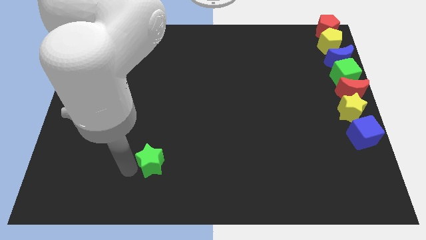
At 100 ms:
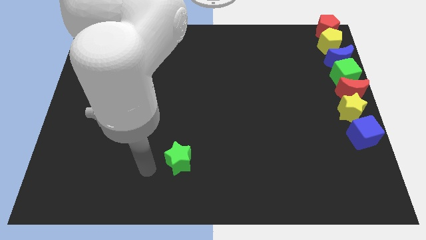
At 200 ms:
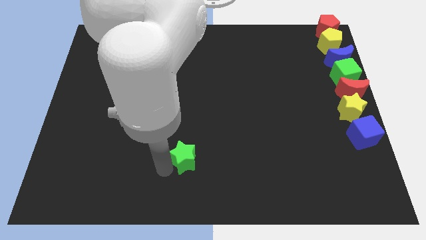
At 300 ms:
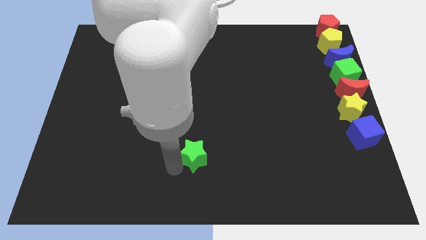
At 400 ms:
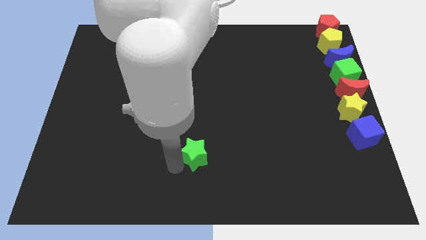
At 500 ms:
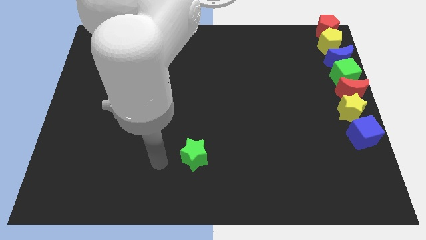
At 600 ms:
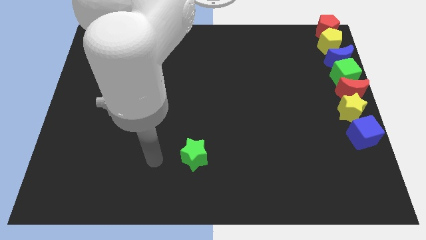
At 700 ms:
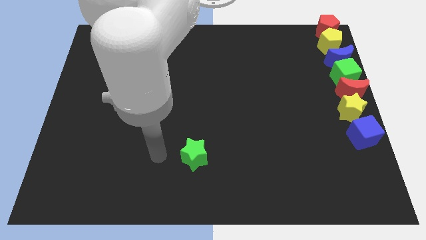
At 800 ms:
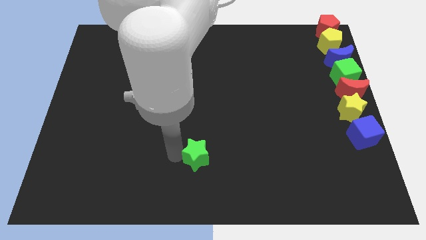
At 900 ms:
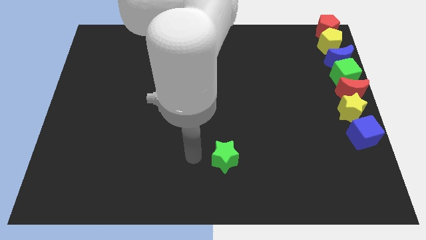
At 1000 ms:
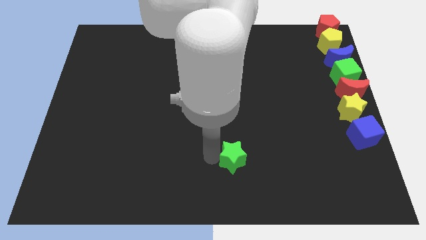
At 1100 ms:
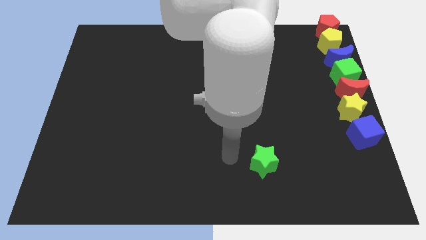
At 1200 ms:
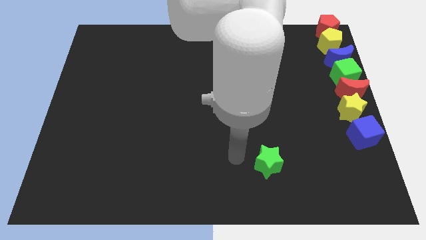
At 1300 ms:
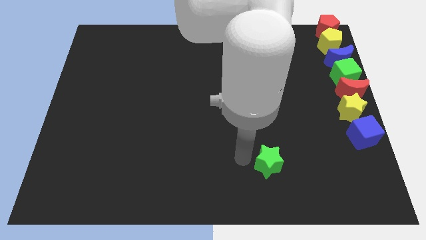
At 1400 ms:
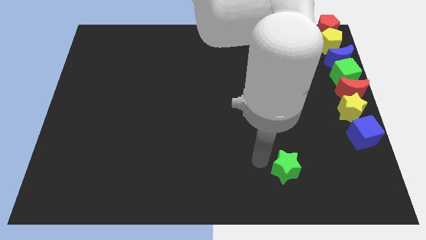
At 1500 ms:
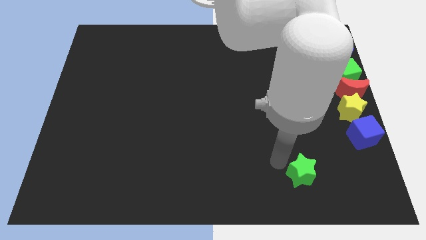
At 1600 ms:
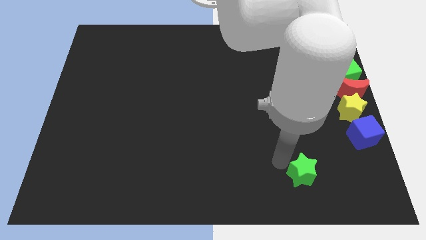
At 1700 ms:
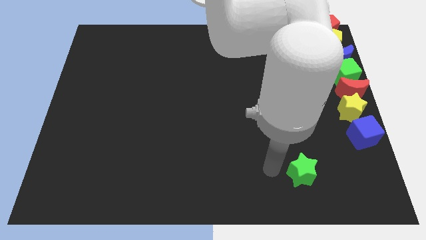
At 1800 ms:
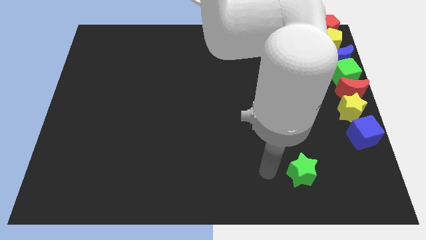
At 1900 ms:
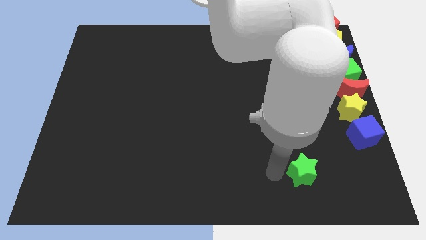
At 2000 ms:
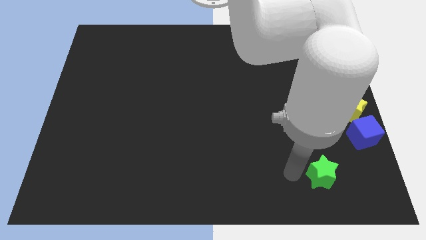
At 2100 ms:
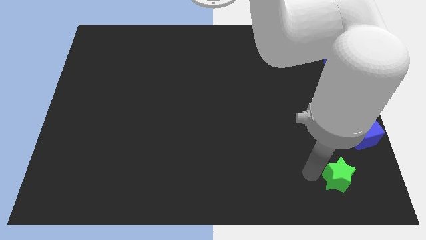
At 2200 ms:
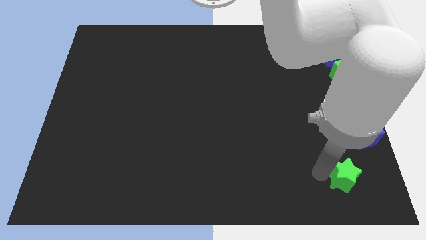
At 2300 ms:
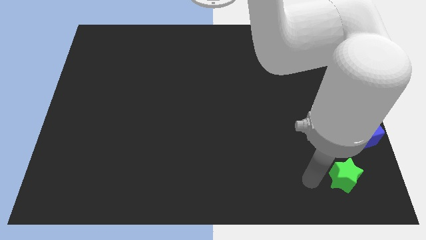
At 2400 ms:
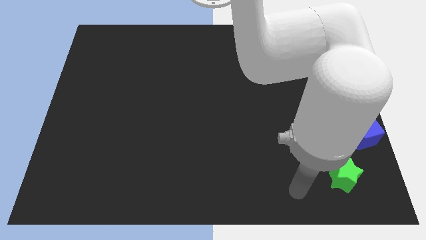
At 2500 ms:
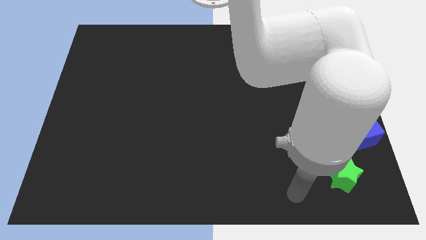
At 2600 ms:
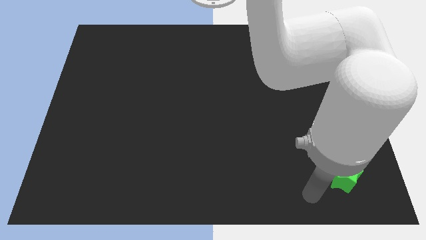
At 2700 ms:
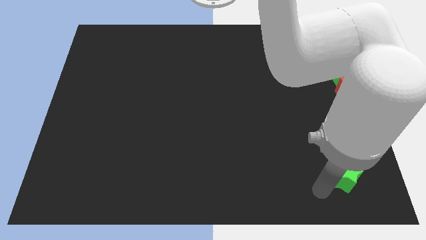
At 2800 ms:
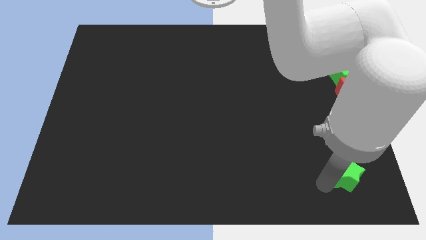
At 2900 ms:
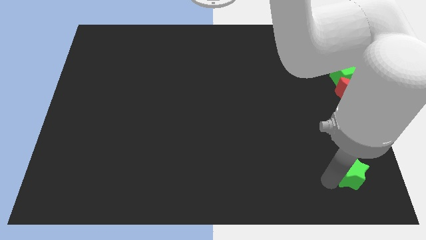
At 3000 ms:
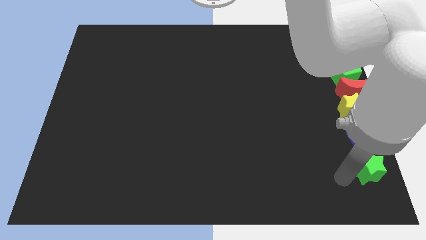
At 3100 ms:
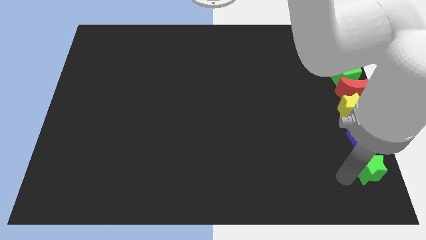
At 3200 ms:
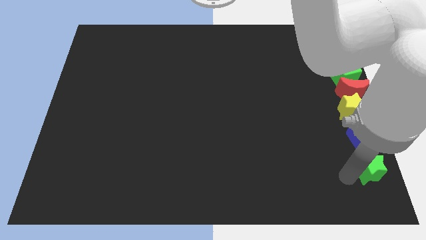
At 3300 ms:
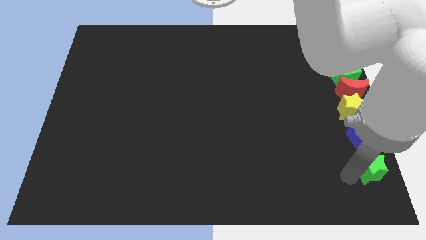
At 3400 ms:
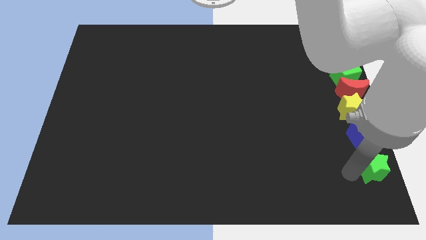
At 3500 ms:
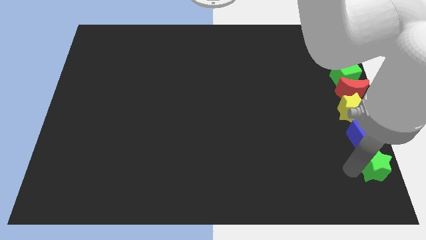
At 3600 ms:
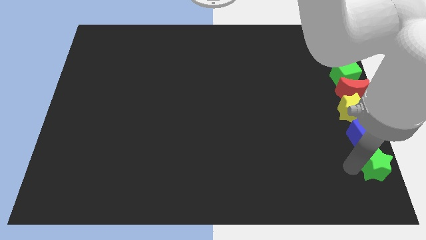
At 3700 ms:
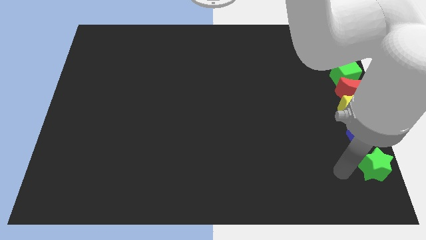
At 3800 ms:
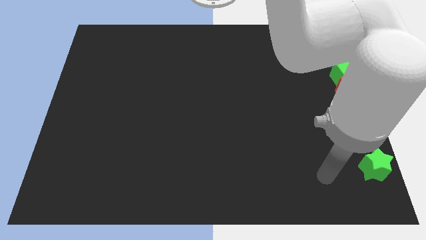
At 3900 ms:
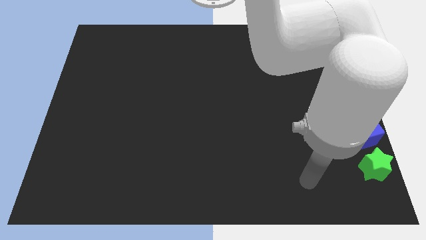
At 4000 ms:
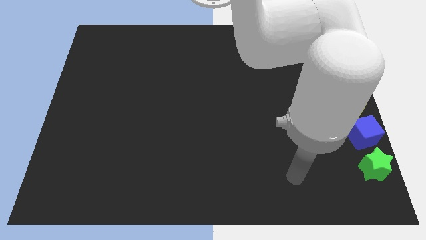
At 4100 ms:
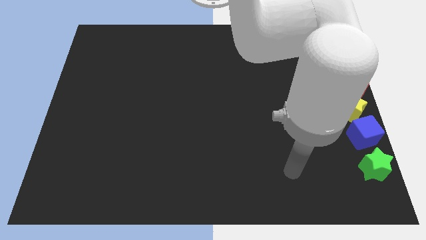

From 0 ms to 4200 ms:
push the green star towards the bottom of the blue cube

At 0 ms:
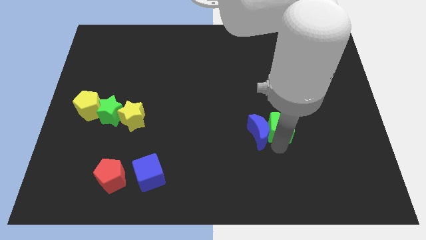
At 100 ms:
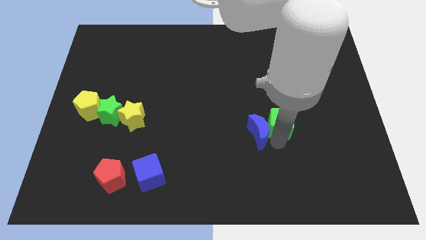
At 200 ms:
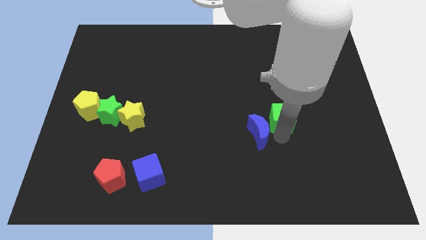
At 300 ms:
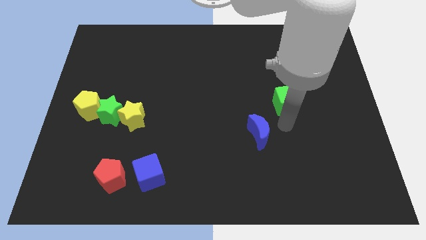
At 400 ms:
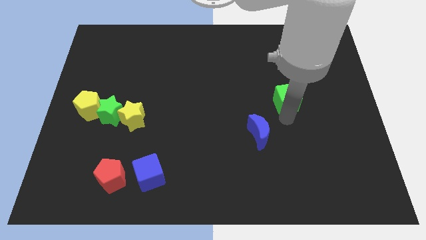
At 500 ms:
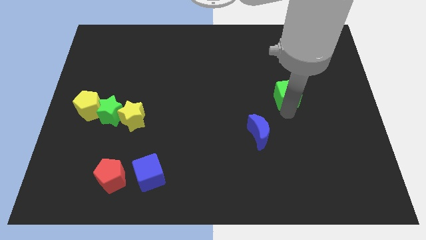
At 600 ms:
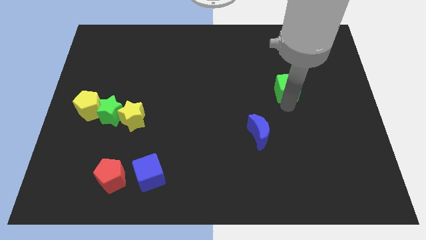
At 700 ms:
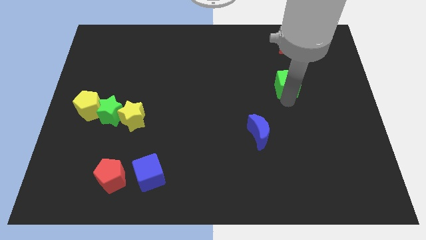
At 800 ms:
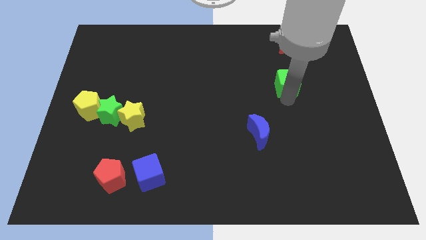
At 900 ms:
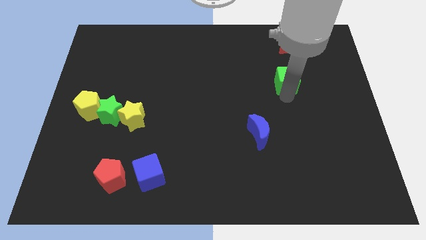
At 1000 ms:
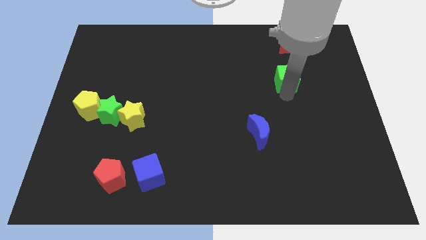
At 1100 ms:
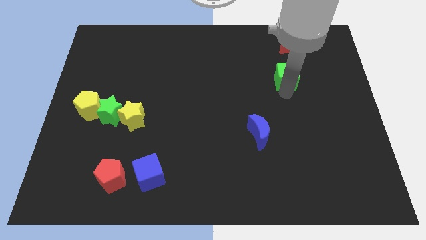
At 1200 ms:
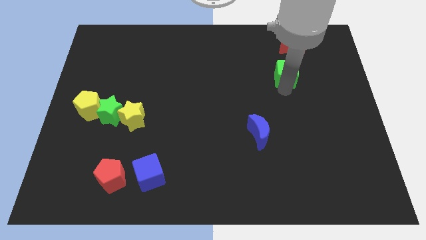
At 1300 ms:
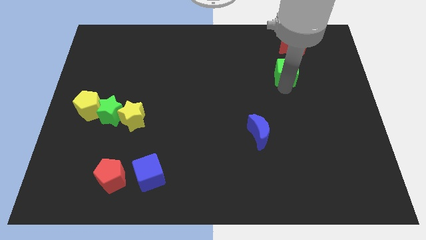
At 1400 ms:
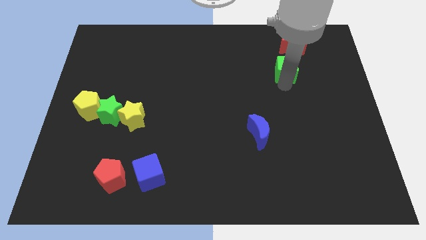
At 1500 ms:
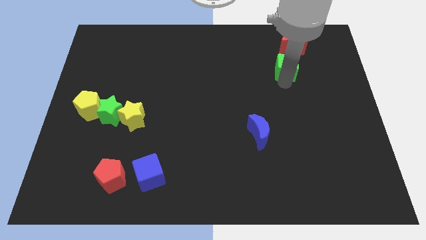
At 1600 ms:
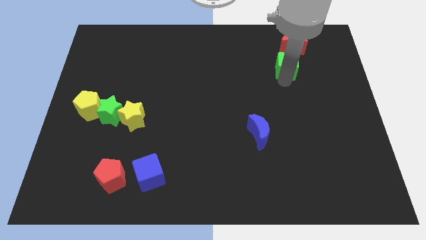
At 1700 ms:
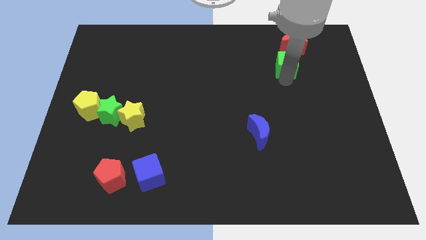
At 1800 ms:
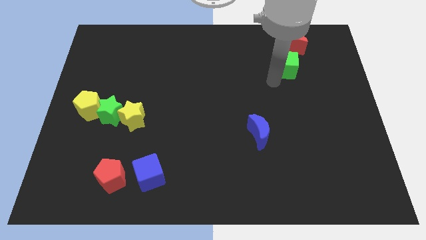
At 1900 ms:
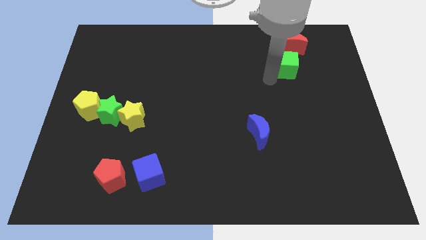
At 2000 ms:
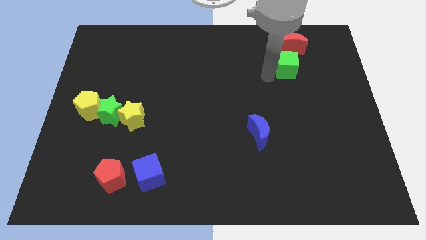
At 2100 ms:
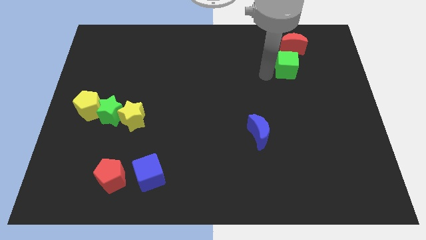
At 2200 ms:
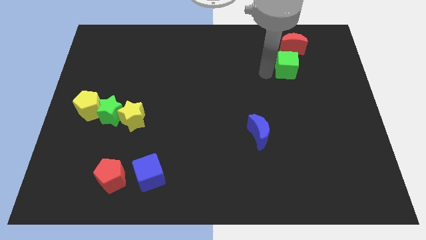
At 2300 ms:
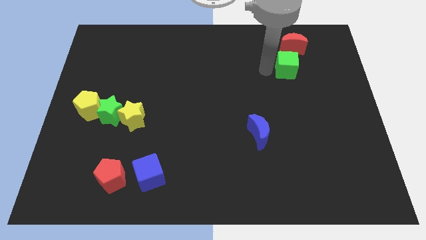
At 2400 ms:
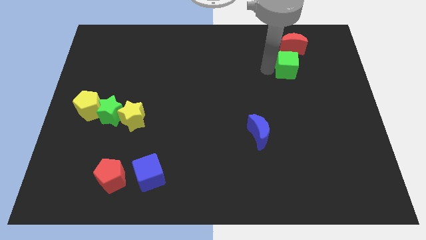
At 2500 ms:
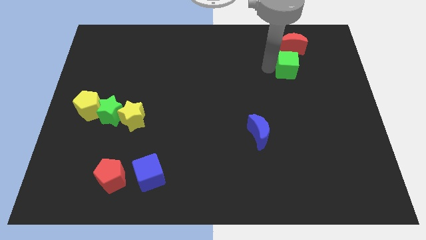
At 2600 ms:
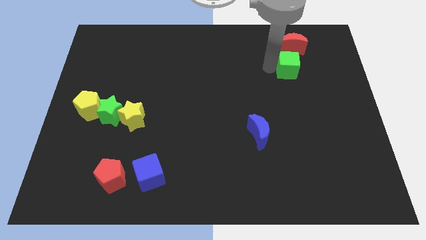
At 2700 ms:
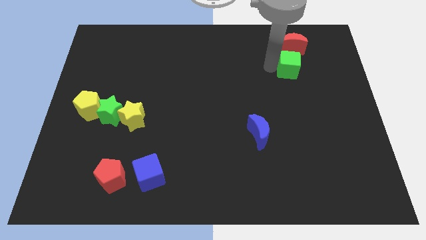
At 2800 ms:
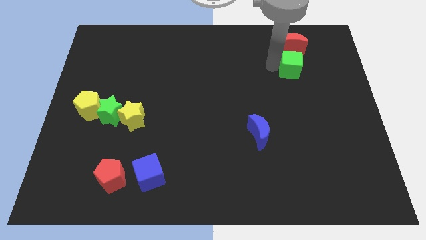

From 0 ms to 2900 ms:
move the green cube to the bottom of the red crescent

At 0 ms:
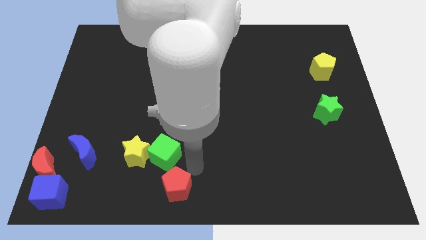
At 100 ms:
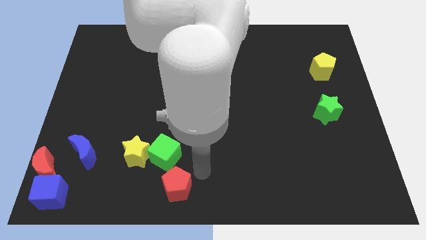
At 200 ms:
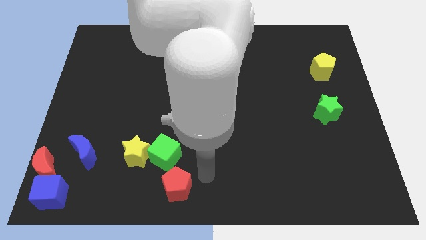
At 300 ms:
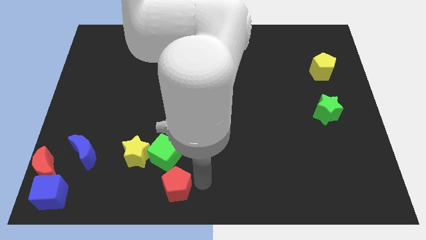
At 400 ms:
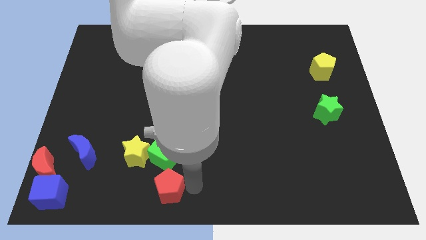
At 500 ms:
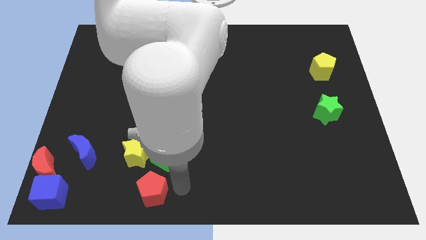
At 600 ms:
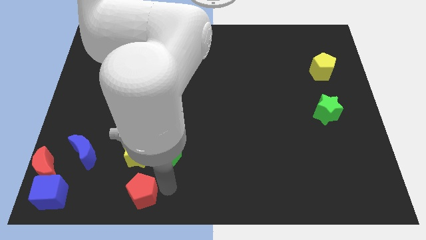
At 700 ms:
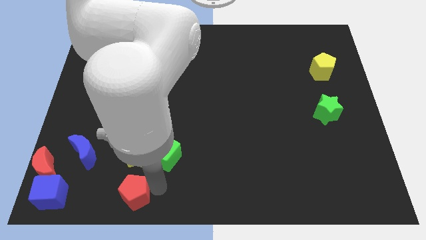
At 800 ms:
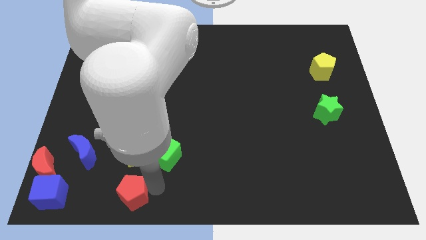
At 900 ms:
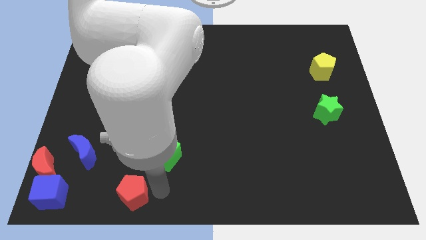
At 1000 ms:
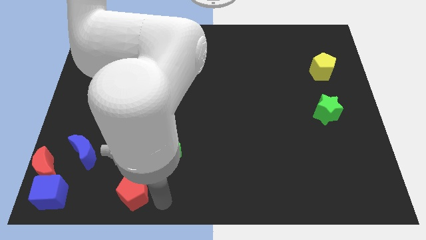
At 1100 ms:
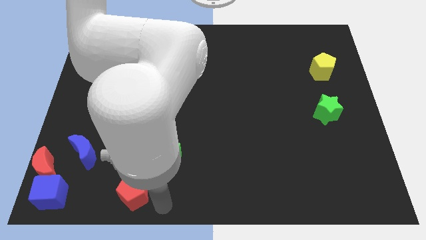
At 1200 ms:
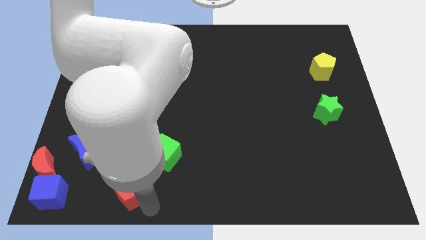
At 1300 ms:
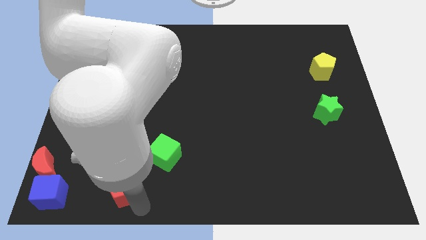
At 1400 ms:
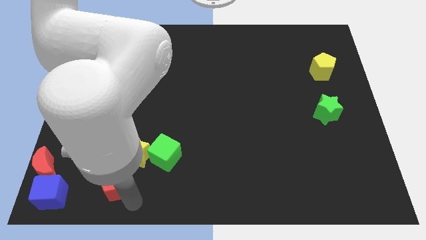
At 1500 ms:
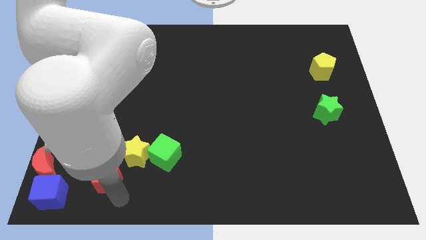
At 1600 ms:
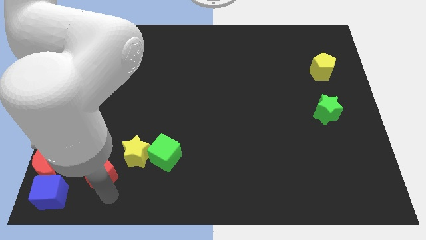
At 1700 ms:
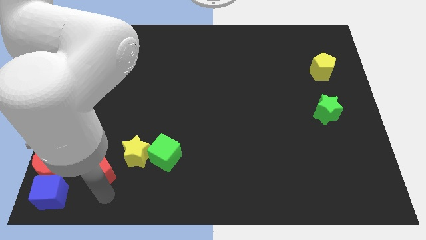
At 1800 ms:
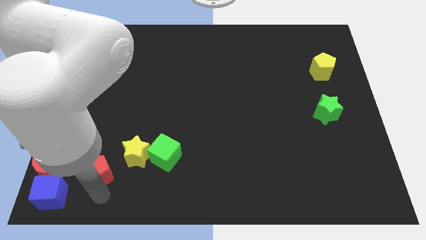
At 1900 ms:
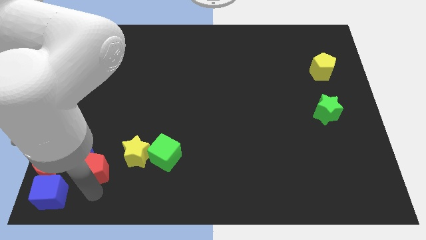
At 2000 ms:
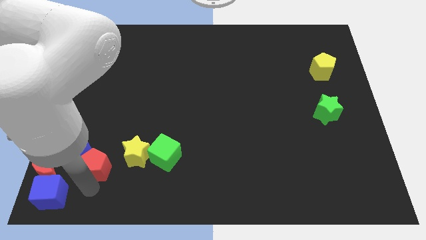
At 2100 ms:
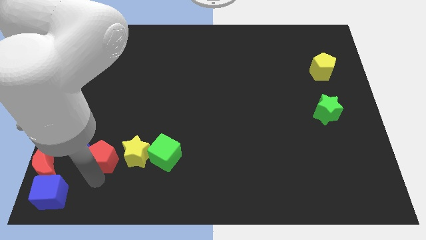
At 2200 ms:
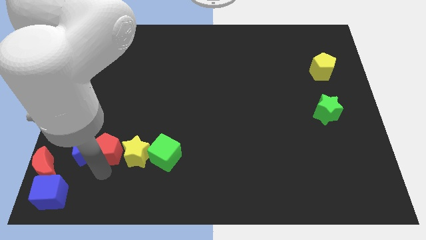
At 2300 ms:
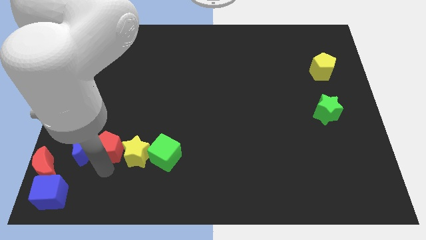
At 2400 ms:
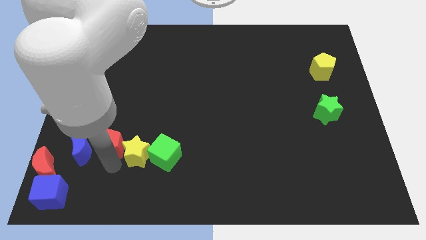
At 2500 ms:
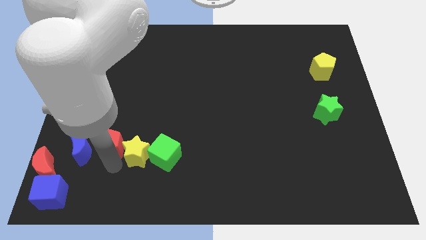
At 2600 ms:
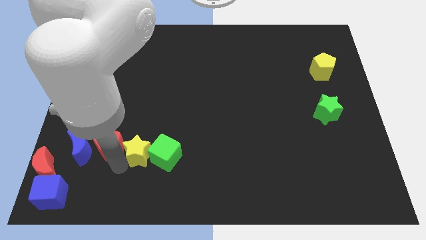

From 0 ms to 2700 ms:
place the red pentagon between the blue moon and yellow star
